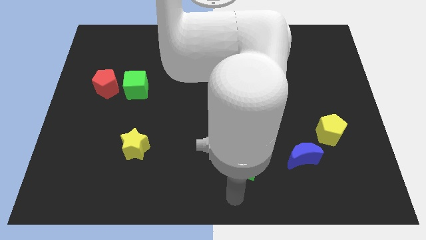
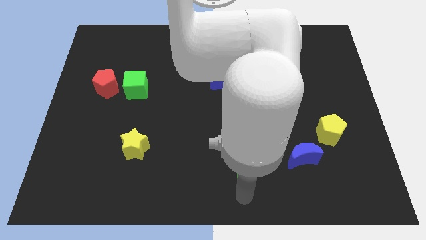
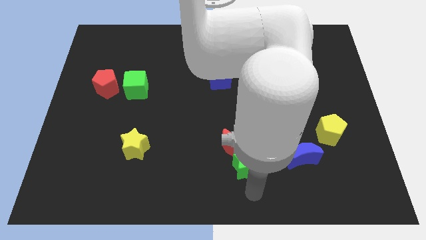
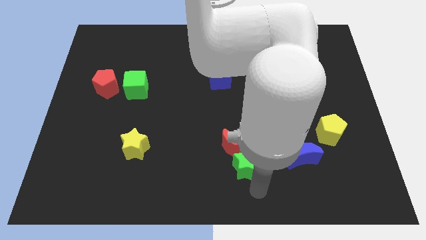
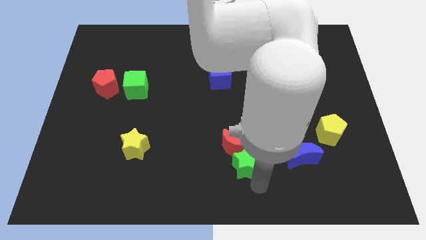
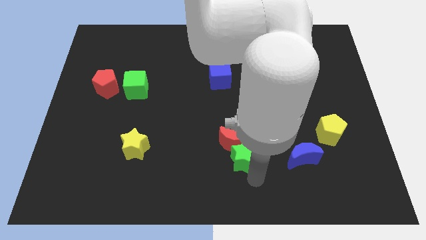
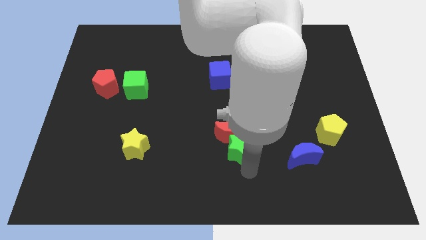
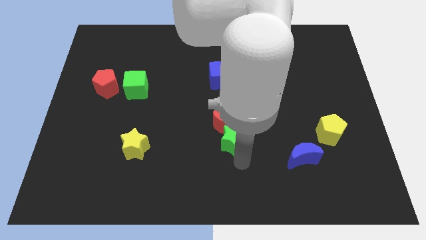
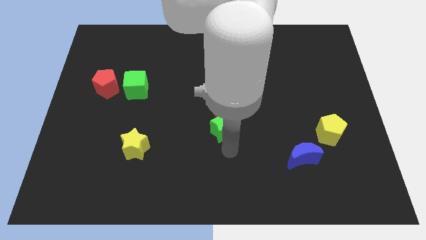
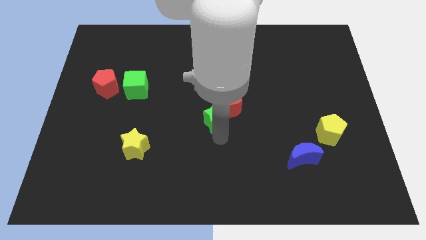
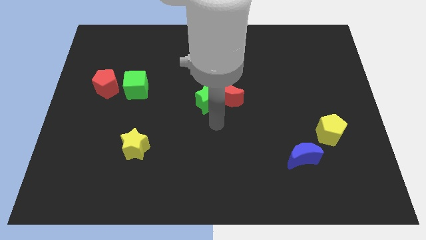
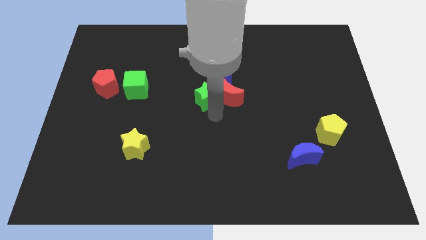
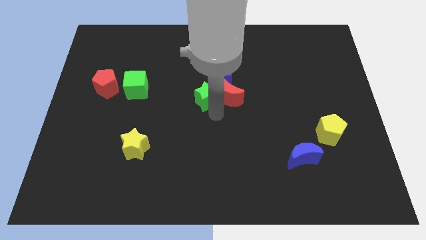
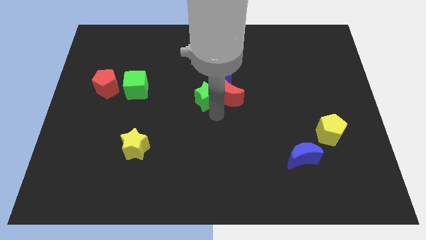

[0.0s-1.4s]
push the green star into the red moon

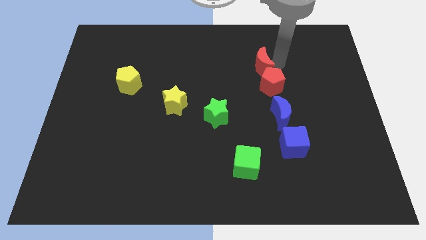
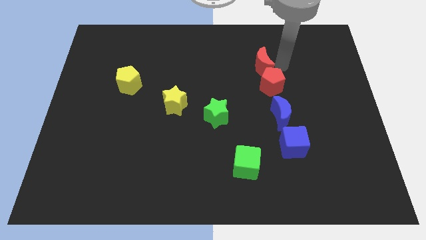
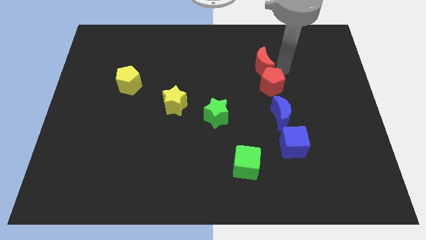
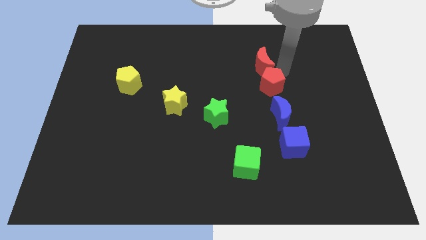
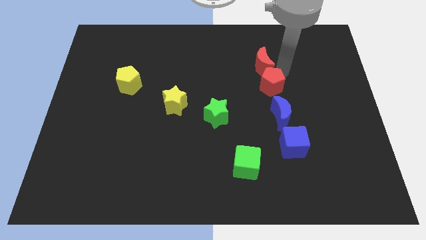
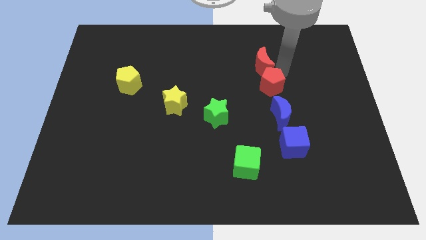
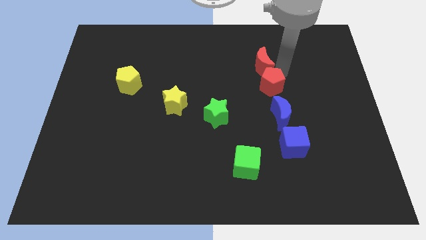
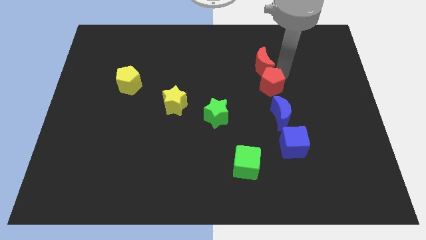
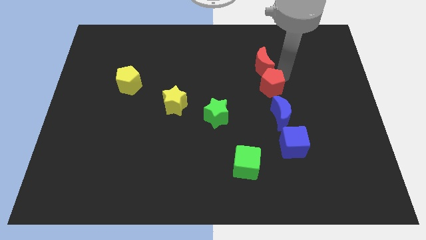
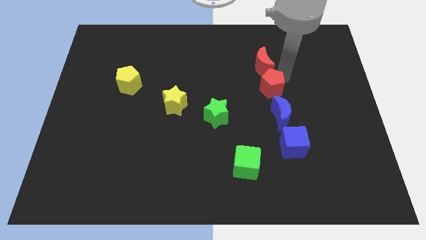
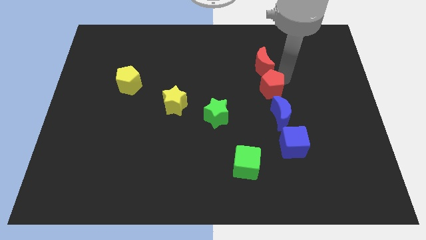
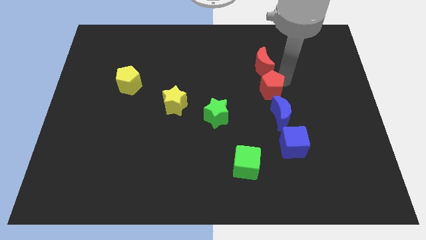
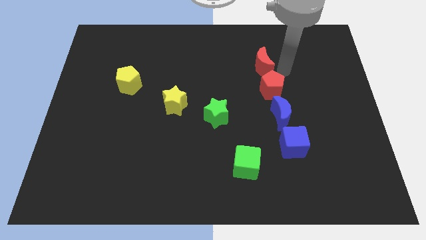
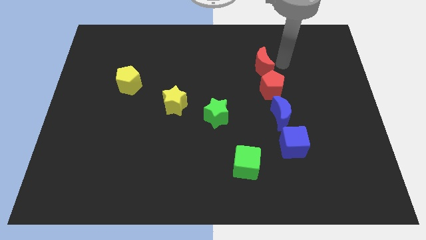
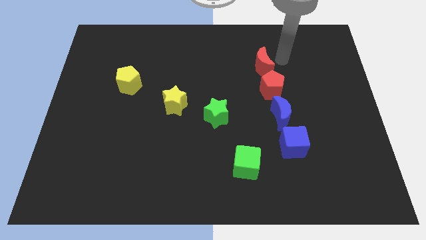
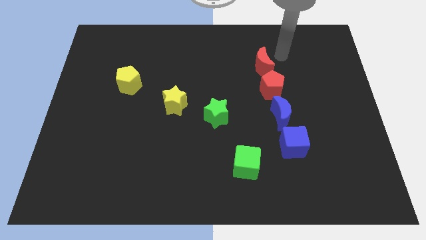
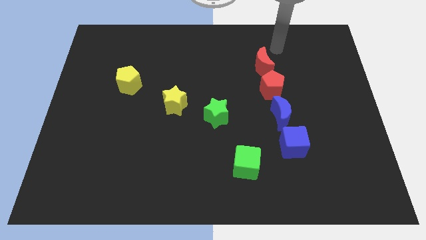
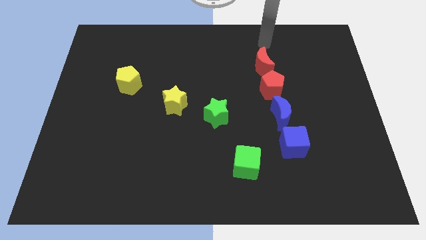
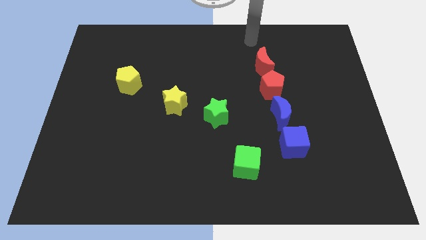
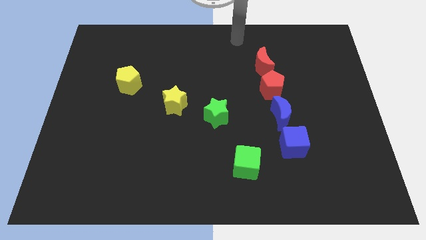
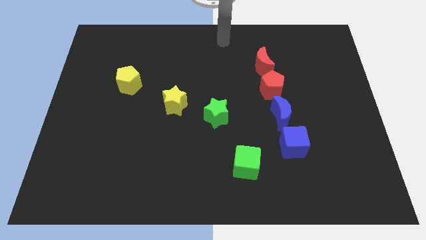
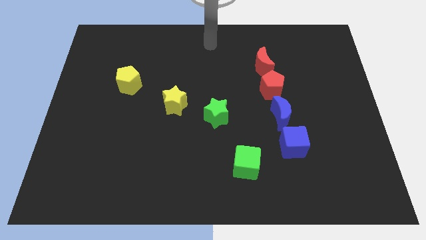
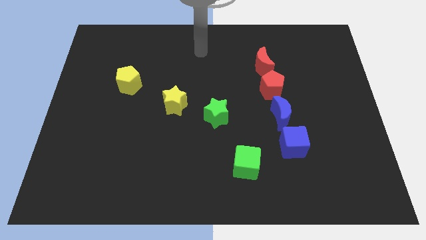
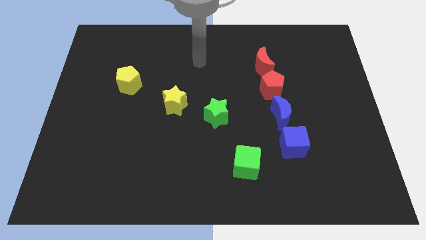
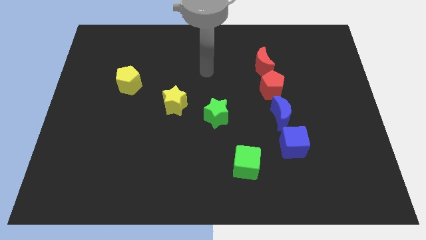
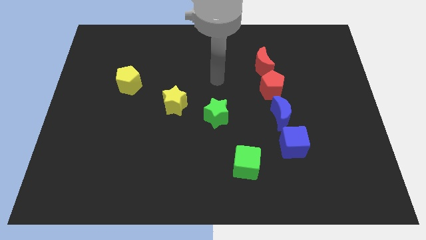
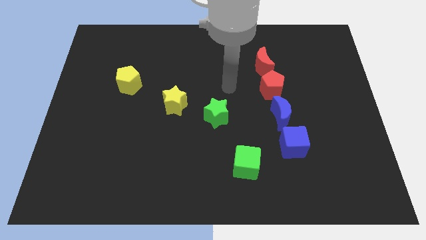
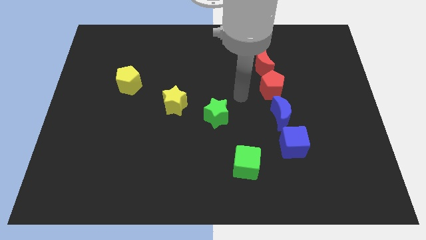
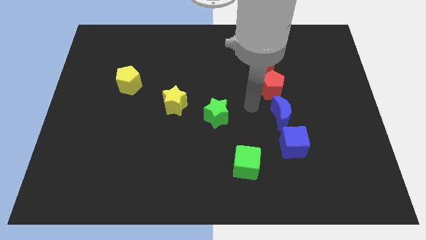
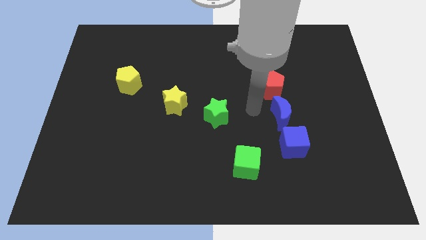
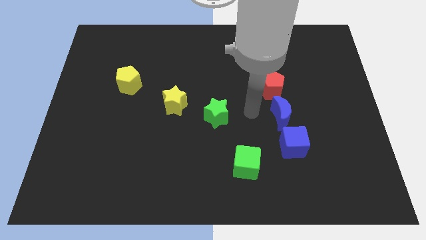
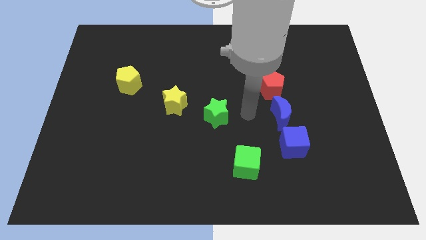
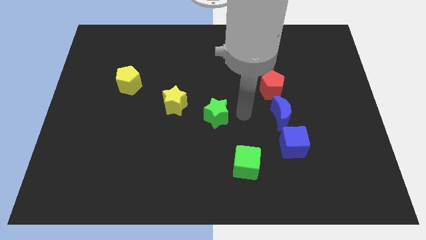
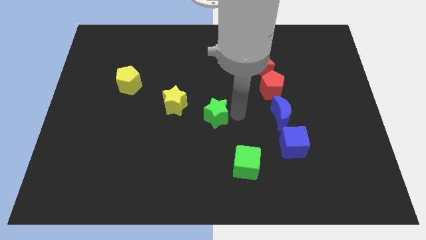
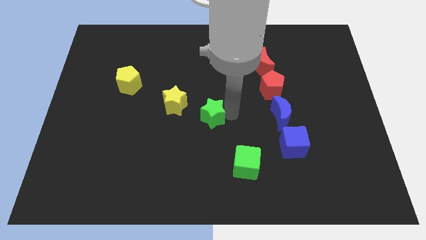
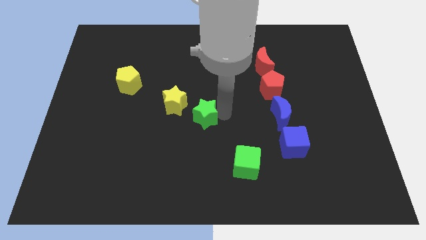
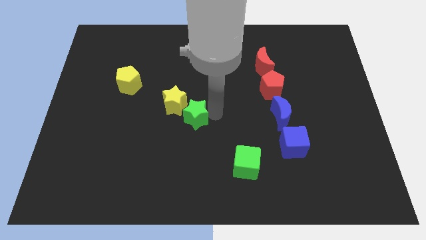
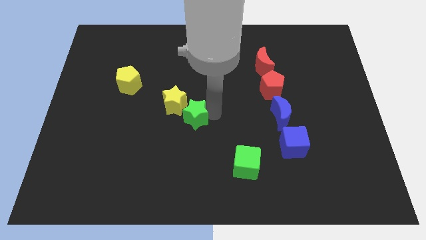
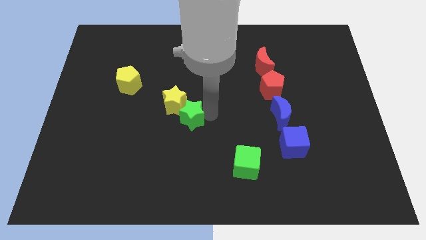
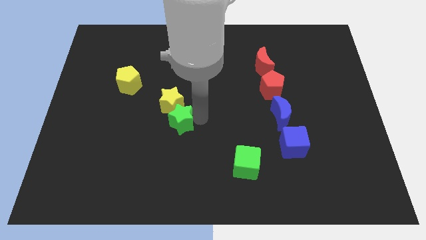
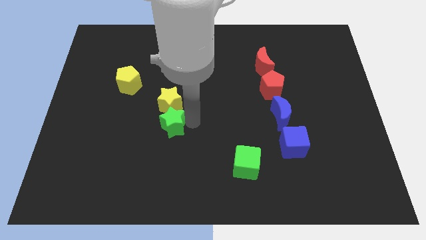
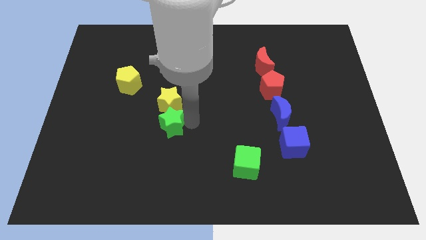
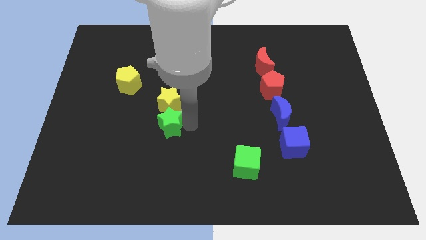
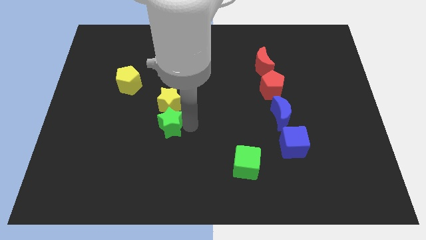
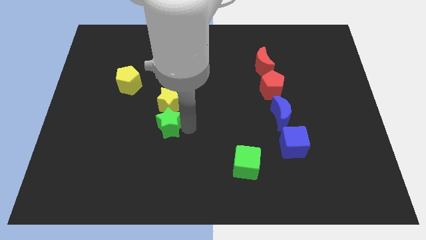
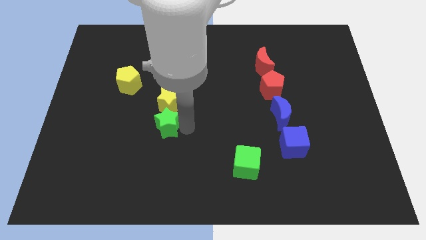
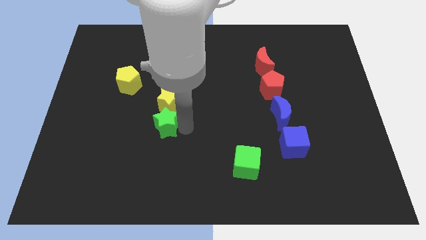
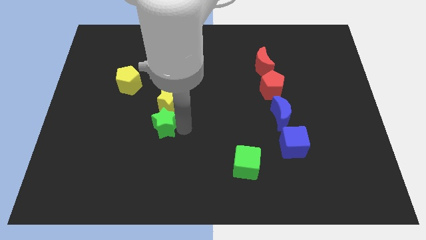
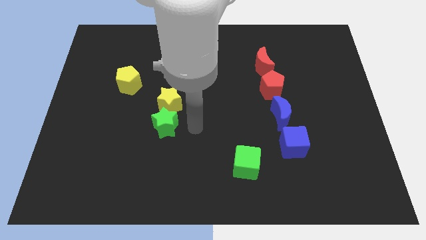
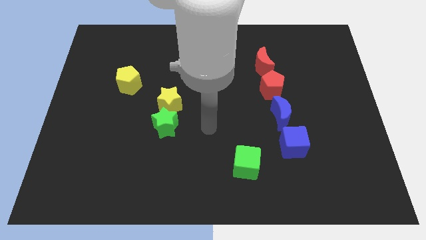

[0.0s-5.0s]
place the green star to the bottom of the yellow star

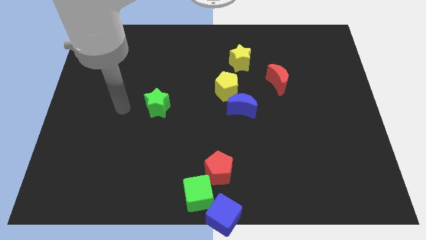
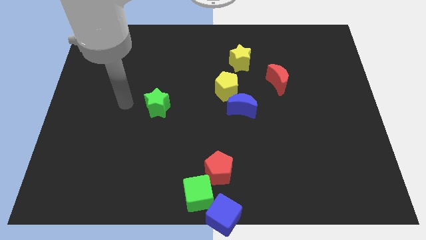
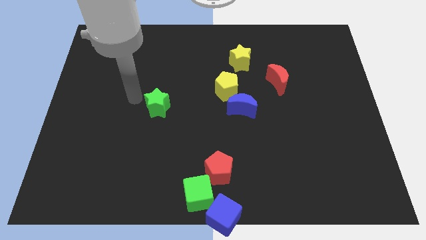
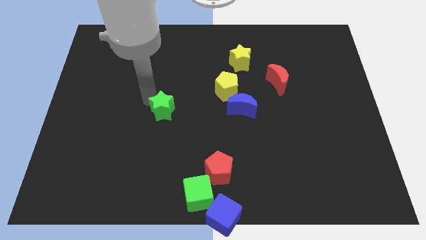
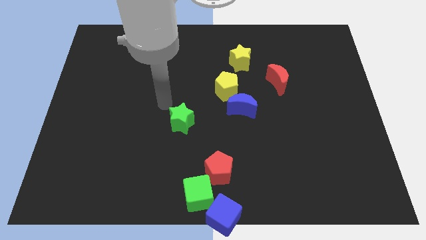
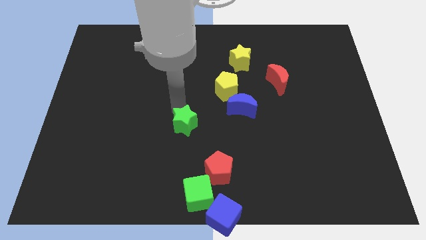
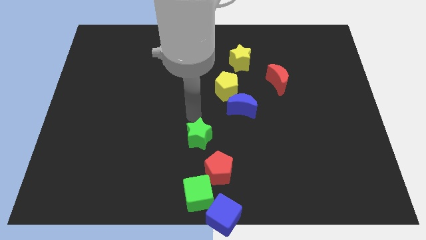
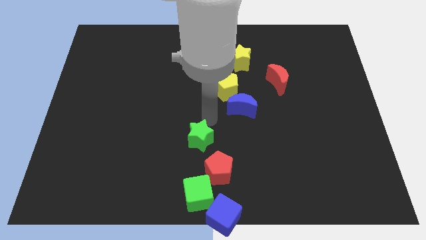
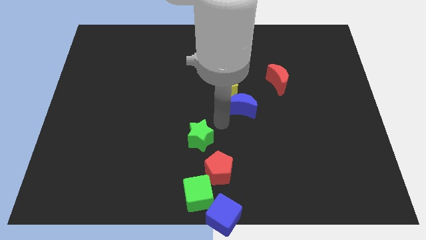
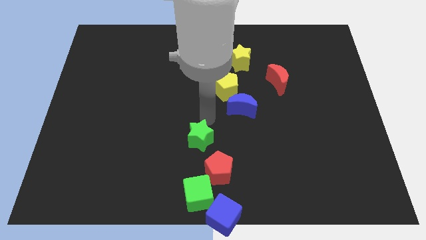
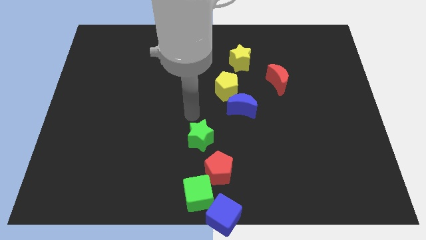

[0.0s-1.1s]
move the green star towards the bottom center of the board

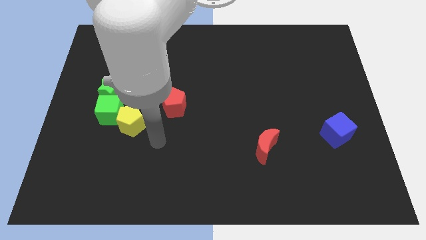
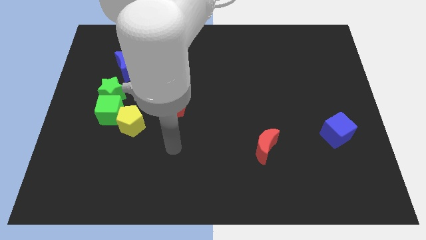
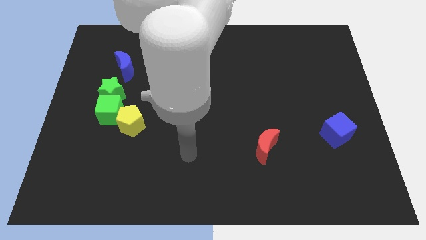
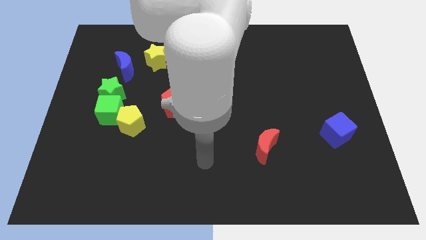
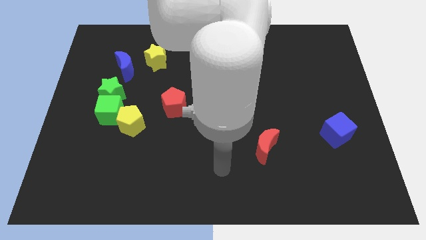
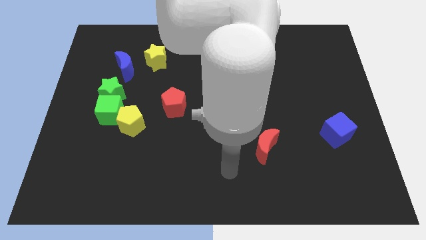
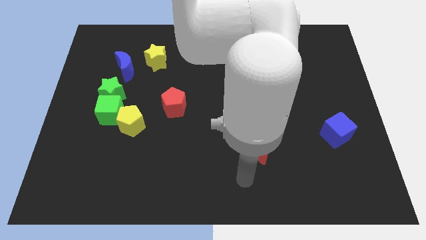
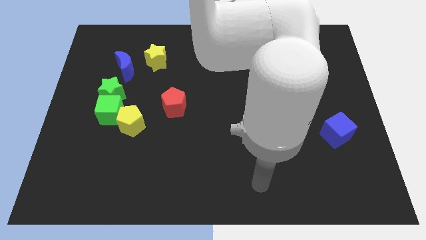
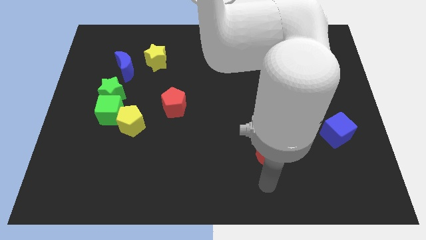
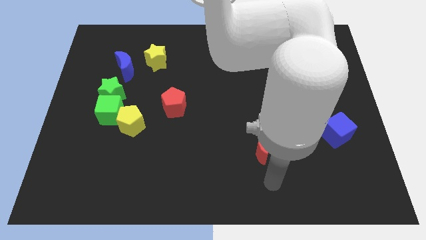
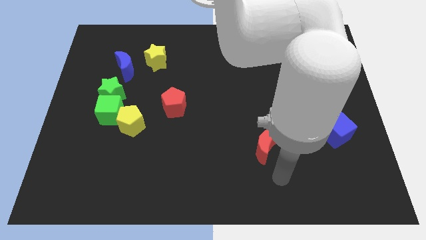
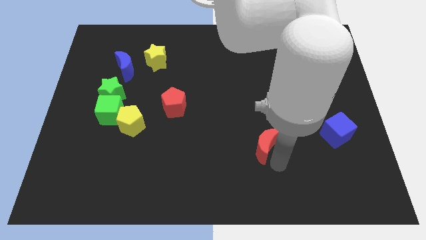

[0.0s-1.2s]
move the arm away from the yellow pentagon

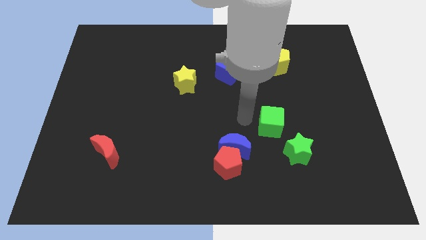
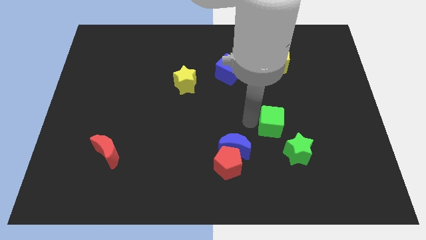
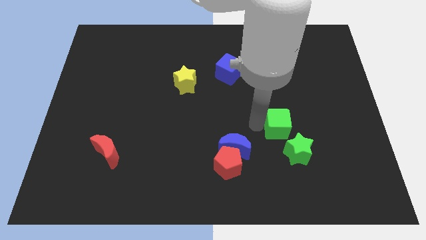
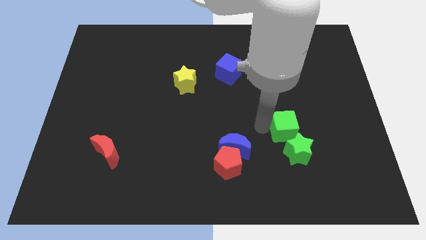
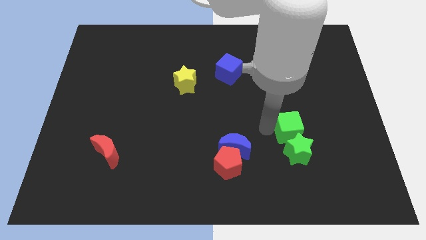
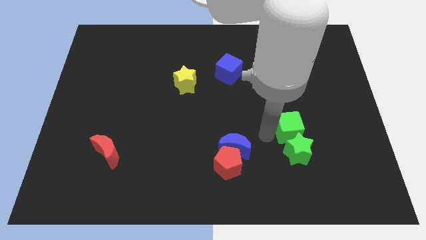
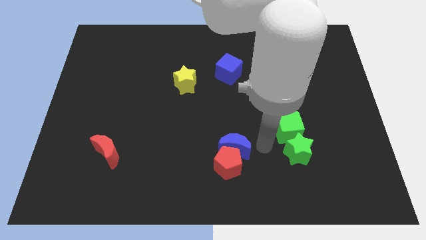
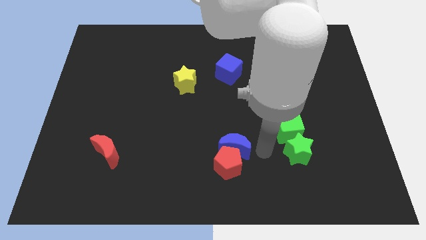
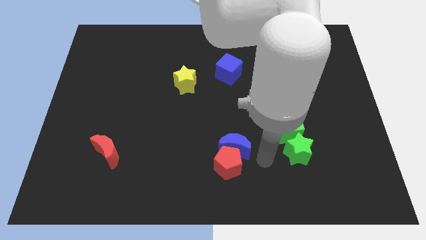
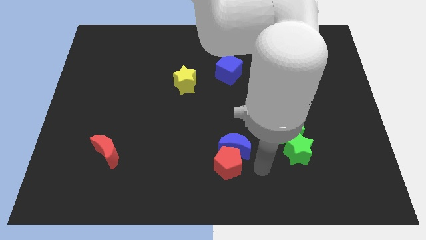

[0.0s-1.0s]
move the green cube above the green star
